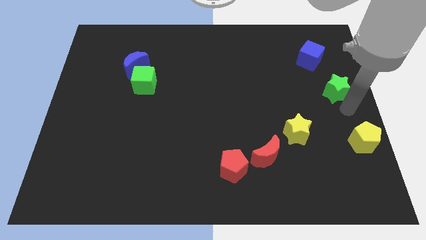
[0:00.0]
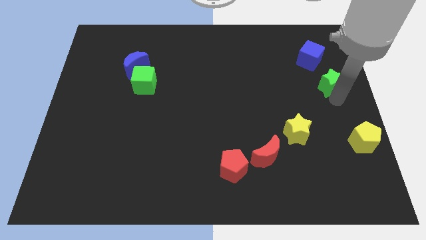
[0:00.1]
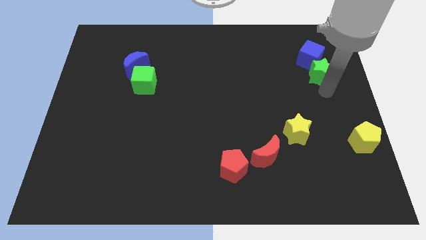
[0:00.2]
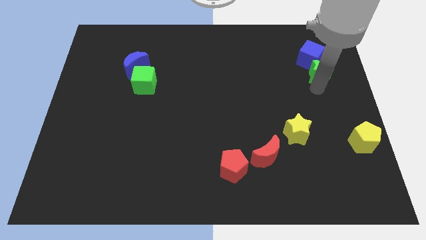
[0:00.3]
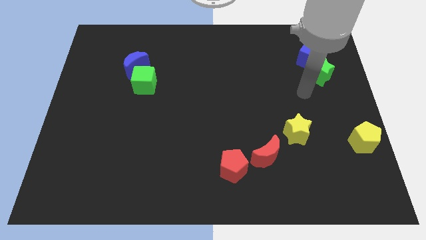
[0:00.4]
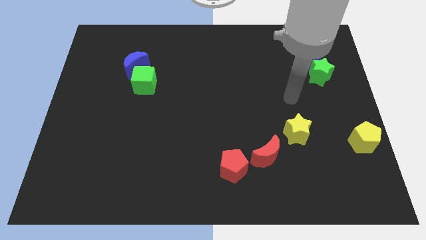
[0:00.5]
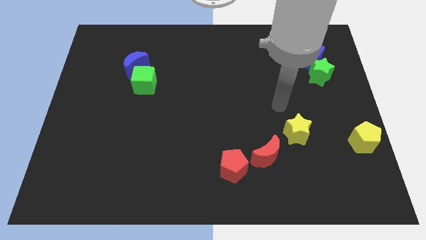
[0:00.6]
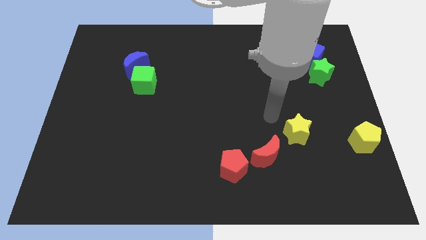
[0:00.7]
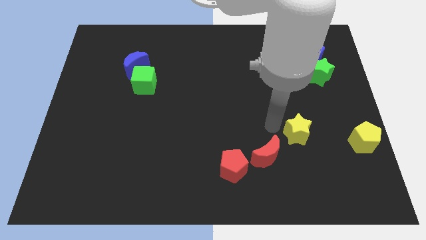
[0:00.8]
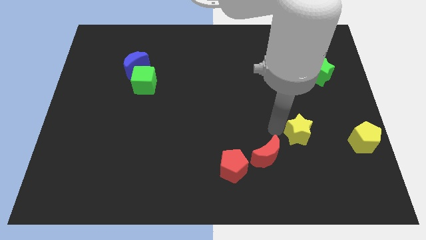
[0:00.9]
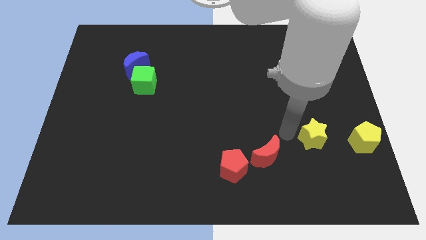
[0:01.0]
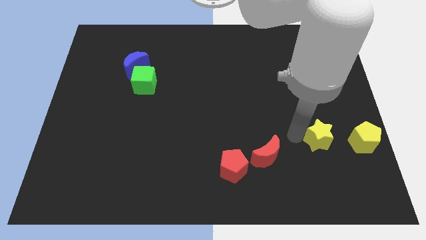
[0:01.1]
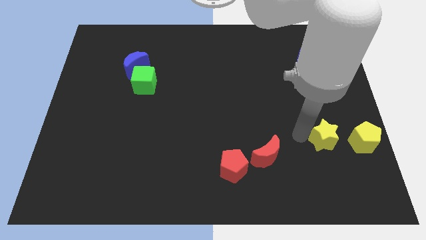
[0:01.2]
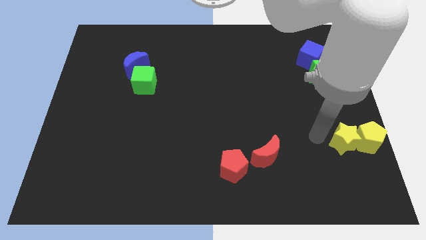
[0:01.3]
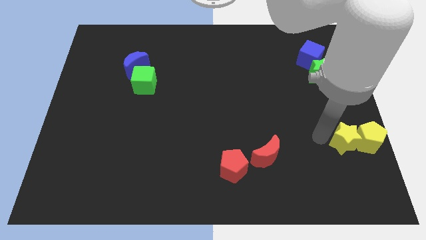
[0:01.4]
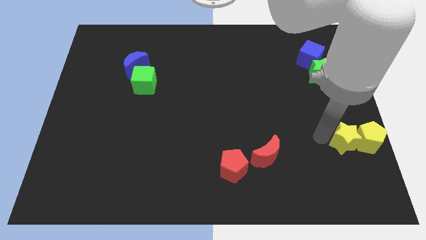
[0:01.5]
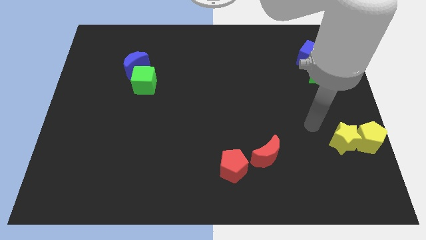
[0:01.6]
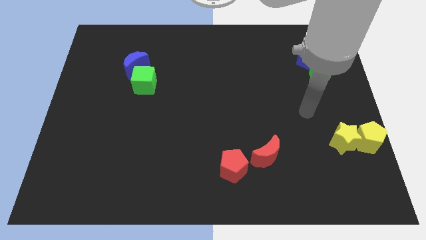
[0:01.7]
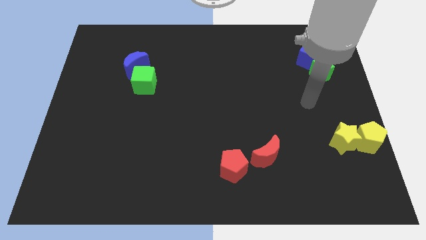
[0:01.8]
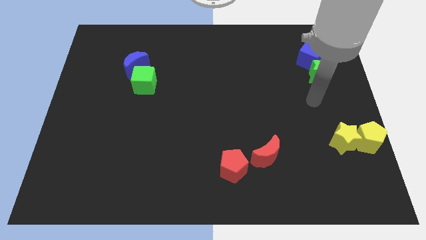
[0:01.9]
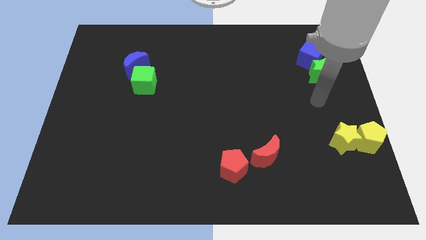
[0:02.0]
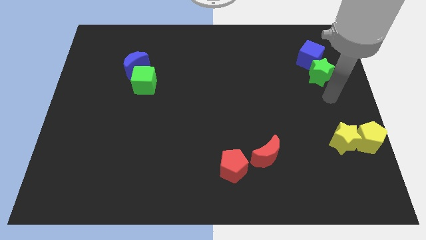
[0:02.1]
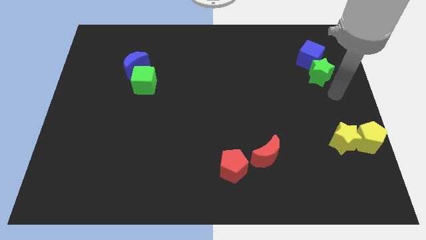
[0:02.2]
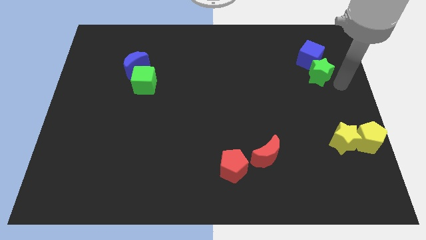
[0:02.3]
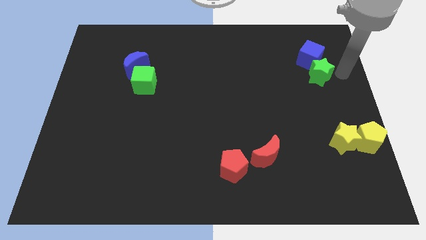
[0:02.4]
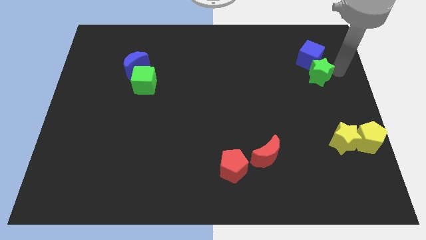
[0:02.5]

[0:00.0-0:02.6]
move yellow star towards the yellow pentagon

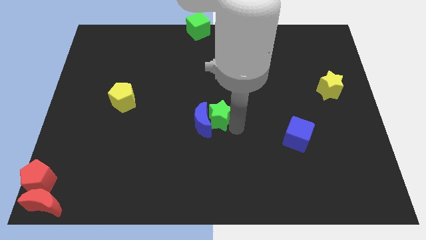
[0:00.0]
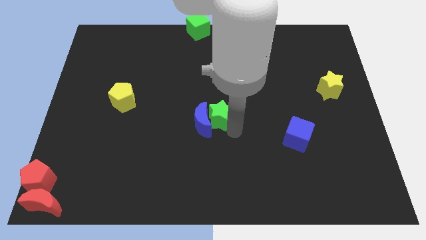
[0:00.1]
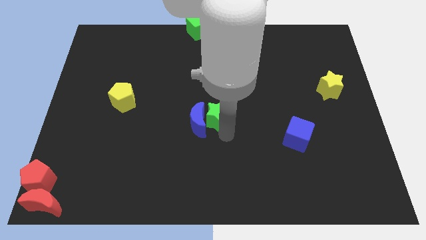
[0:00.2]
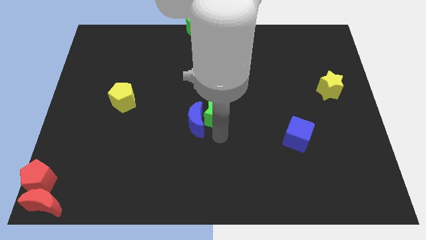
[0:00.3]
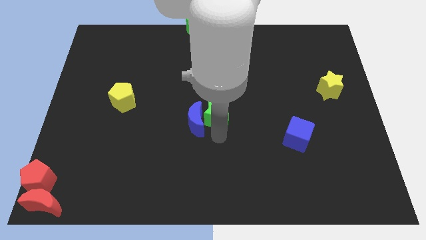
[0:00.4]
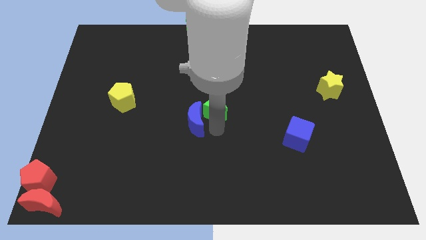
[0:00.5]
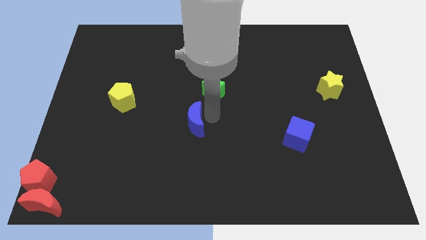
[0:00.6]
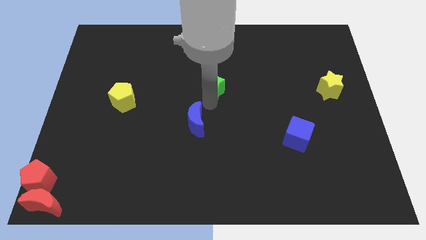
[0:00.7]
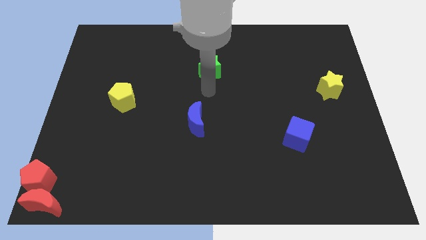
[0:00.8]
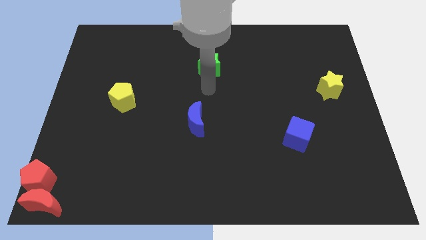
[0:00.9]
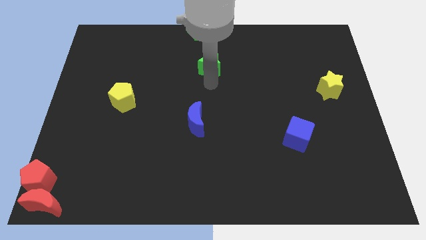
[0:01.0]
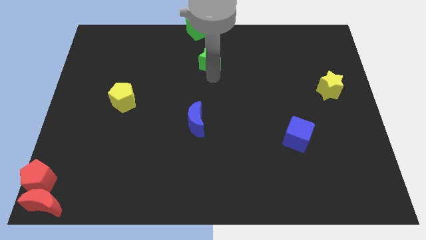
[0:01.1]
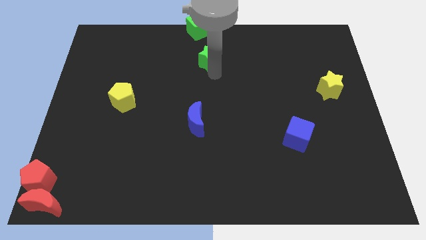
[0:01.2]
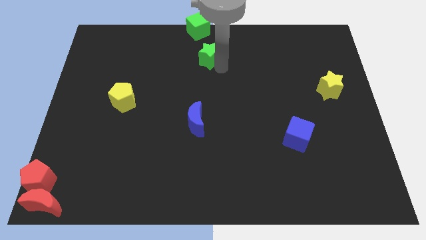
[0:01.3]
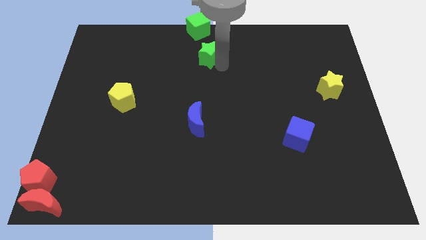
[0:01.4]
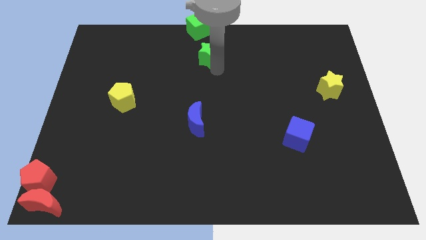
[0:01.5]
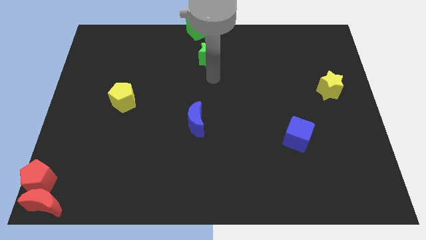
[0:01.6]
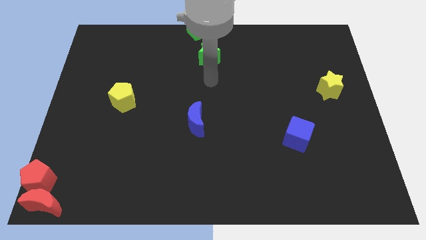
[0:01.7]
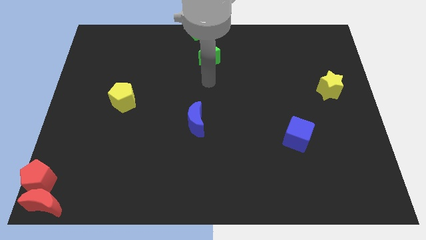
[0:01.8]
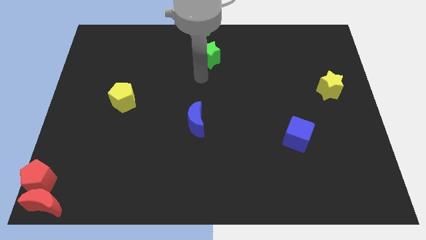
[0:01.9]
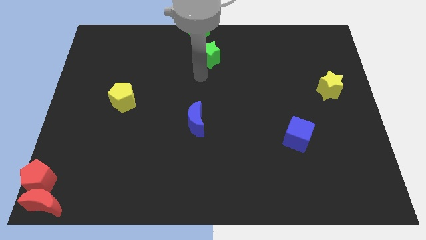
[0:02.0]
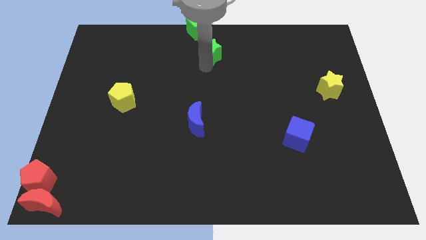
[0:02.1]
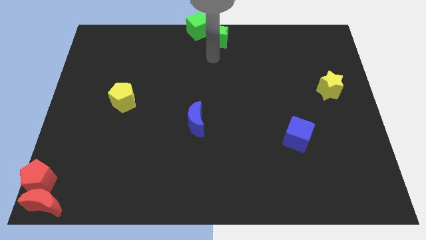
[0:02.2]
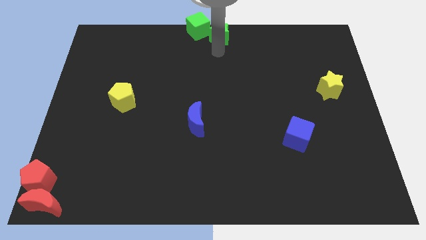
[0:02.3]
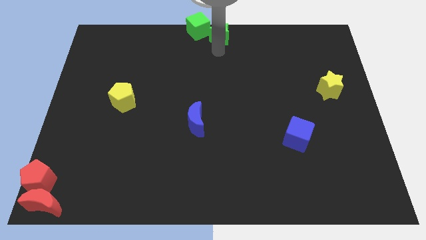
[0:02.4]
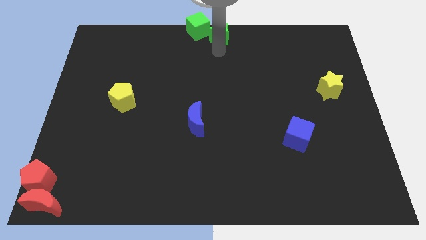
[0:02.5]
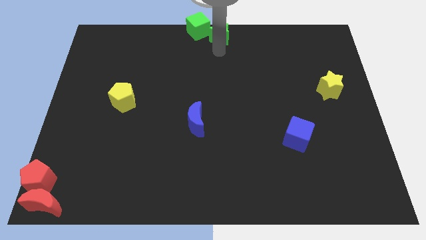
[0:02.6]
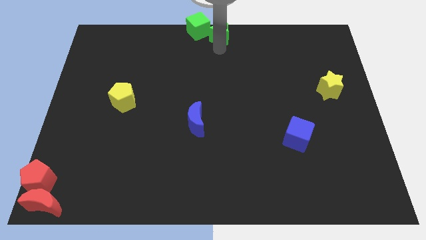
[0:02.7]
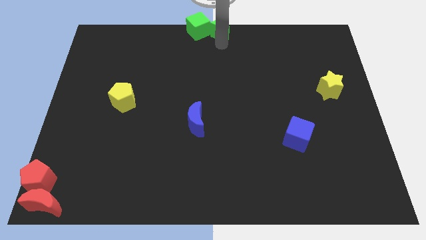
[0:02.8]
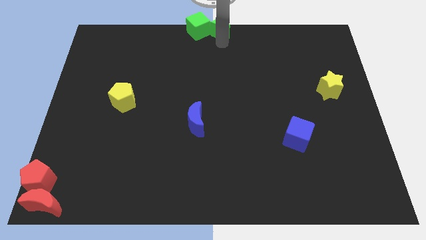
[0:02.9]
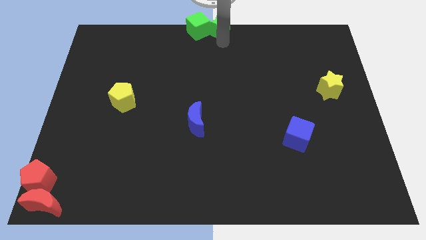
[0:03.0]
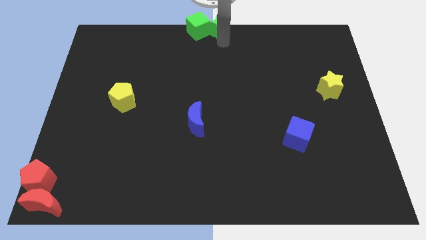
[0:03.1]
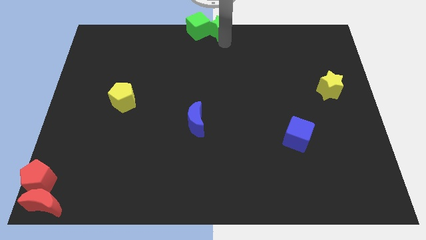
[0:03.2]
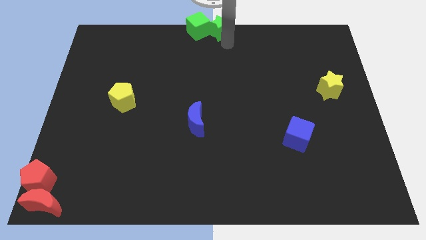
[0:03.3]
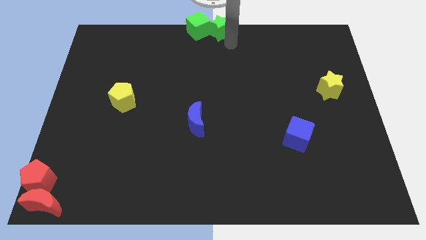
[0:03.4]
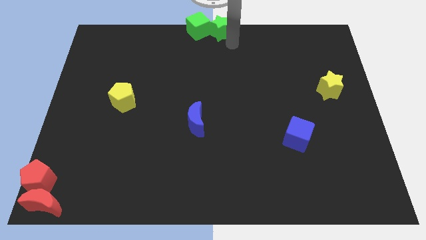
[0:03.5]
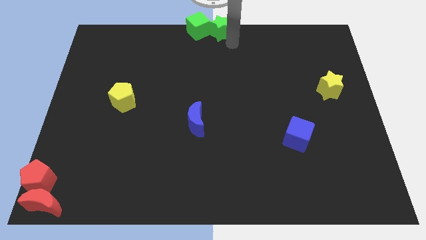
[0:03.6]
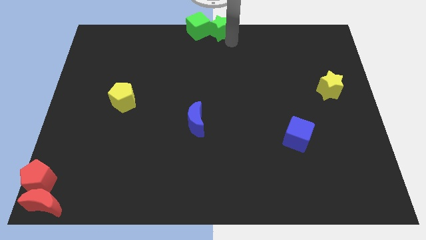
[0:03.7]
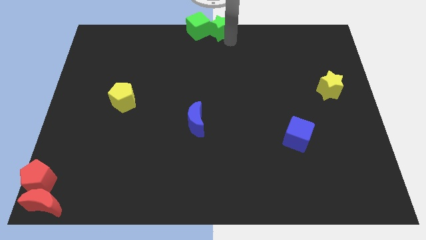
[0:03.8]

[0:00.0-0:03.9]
separate green star from the blue crescent

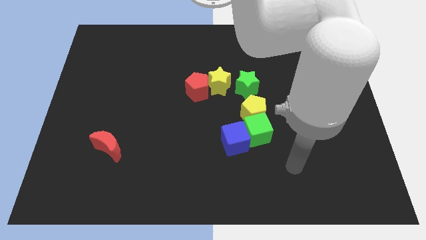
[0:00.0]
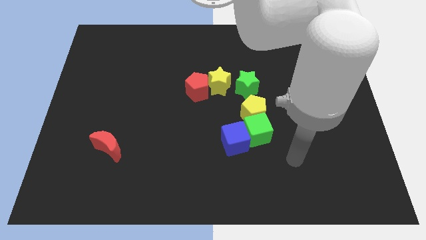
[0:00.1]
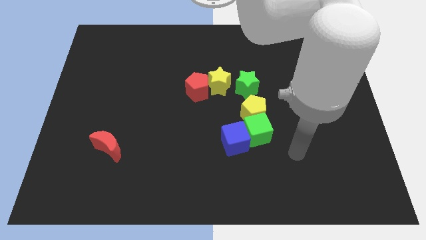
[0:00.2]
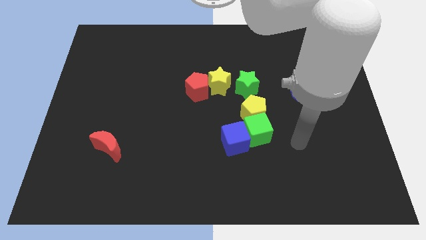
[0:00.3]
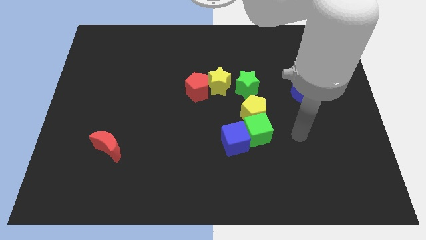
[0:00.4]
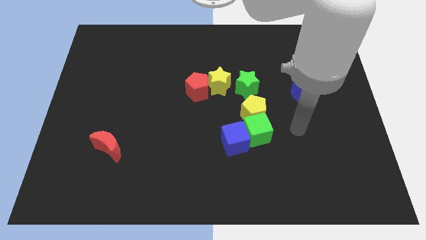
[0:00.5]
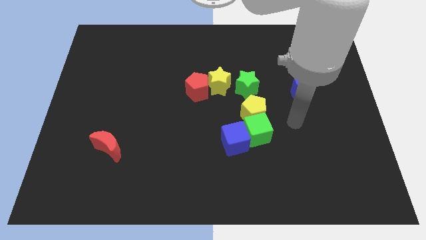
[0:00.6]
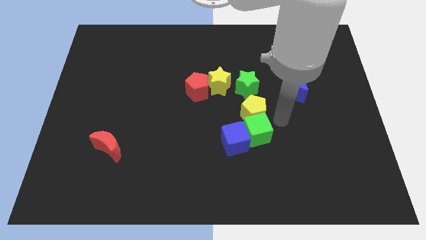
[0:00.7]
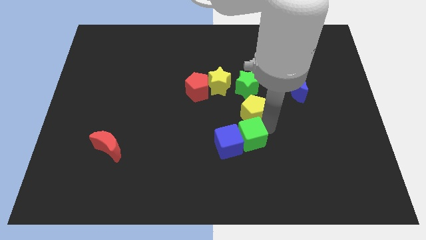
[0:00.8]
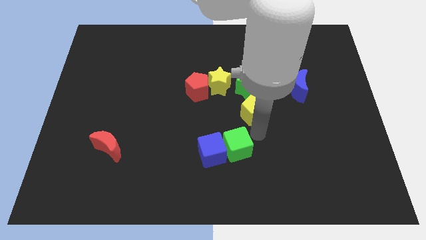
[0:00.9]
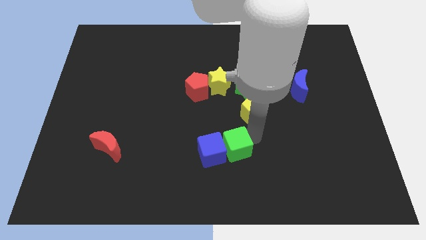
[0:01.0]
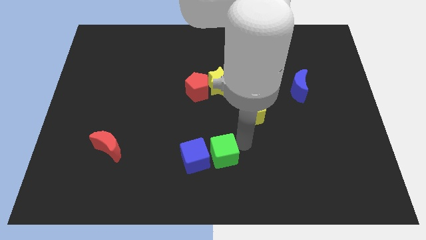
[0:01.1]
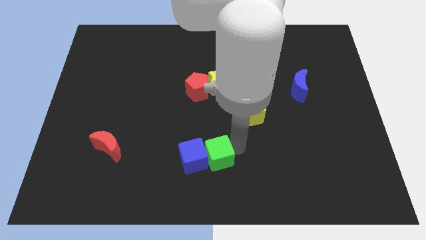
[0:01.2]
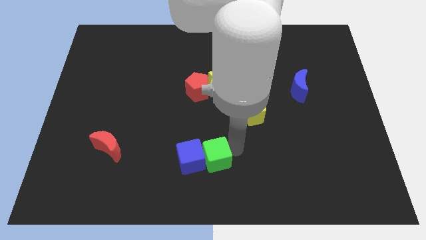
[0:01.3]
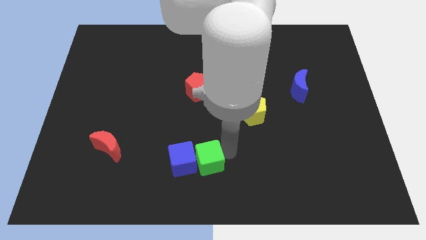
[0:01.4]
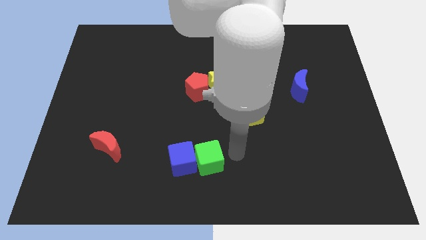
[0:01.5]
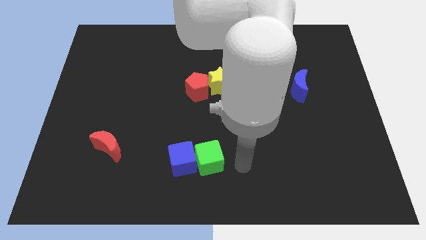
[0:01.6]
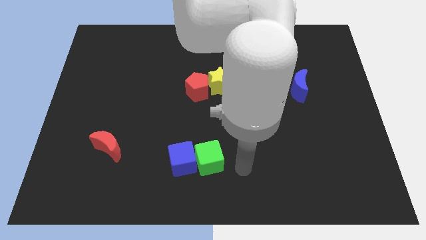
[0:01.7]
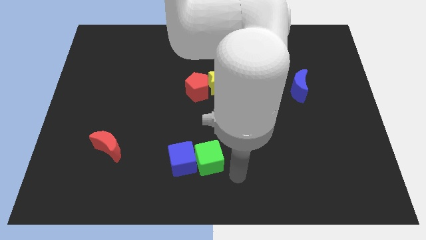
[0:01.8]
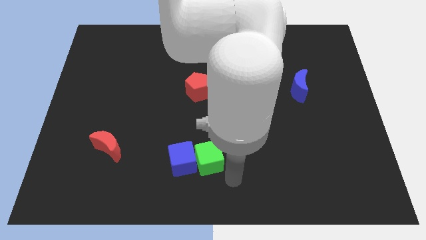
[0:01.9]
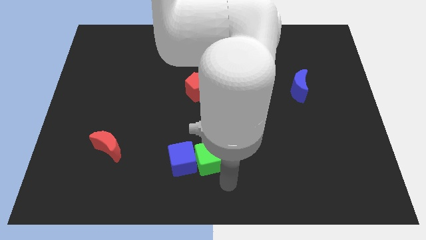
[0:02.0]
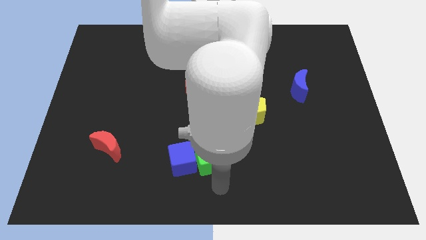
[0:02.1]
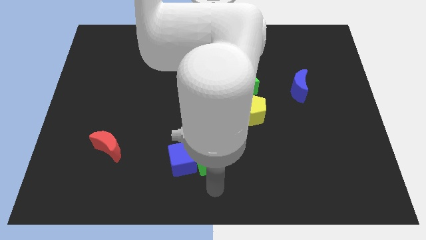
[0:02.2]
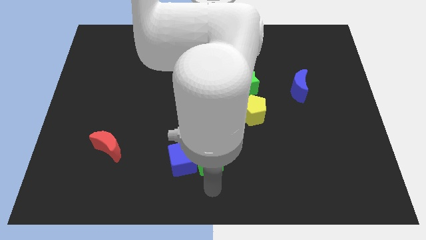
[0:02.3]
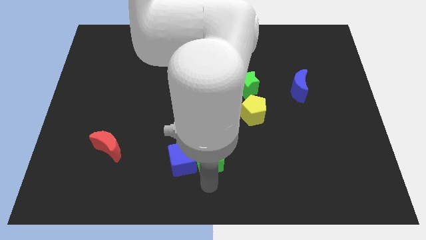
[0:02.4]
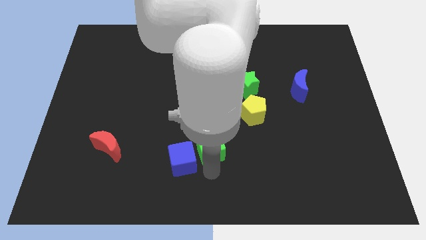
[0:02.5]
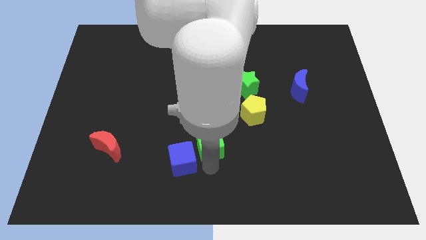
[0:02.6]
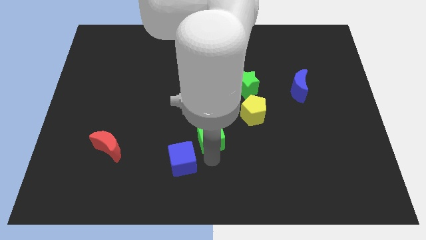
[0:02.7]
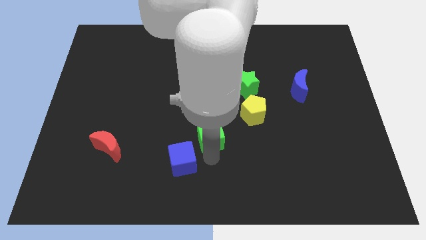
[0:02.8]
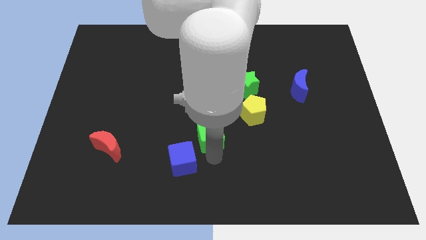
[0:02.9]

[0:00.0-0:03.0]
push the green cube into the blue cube
